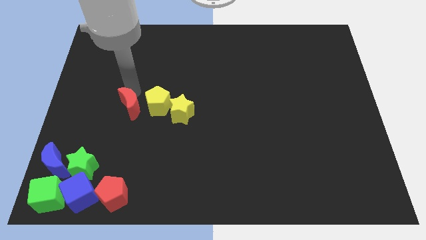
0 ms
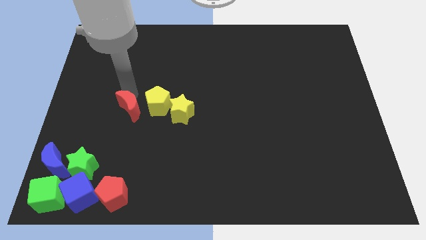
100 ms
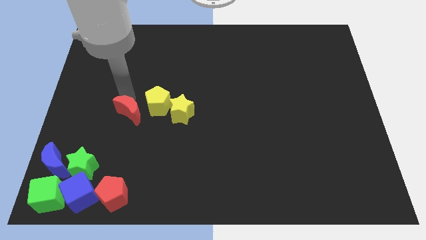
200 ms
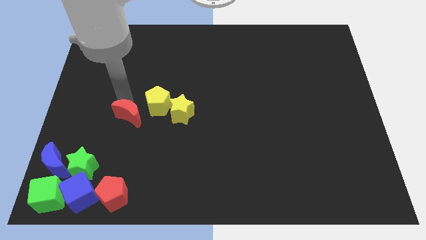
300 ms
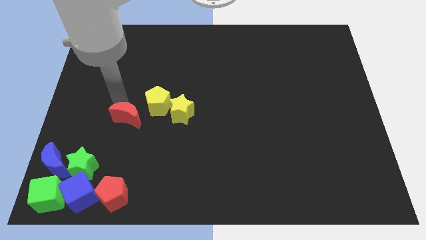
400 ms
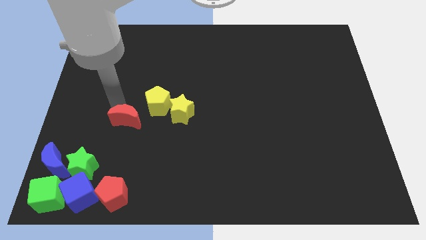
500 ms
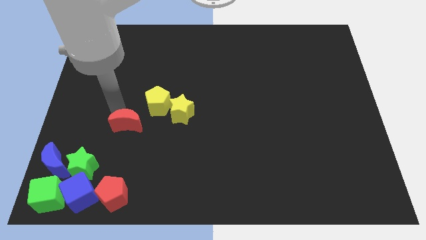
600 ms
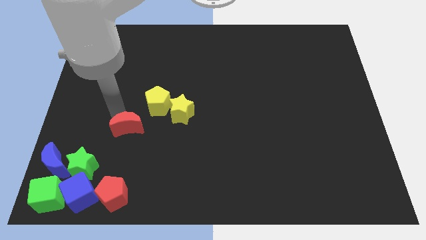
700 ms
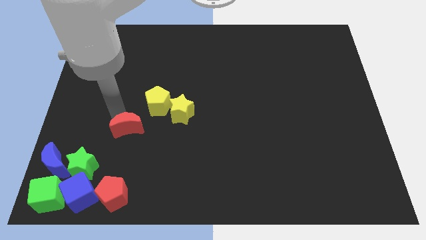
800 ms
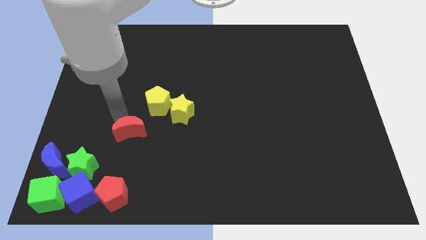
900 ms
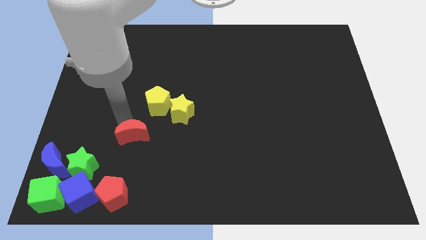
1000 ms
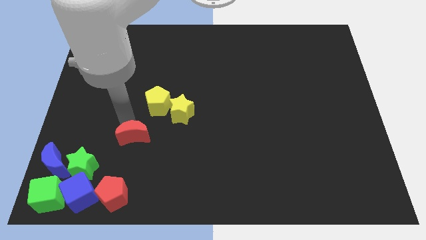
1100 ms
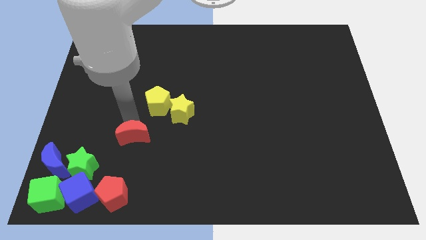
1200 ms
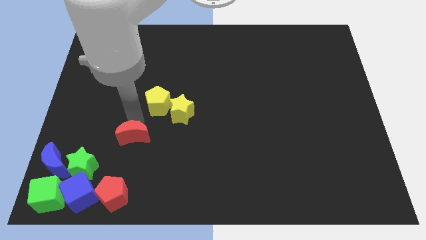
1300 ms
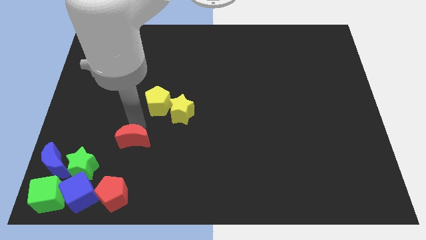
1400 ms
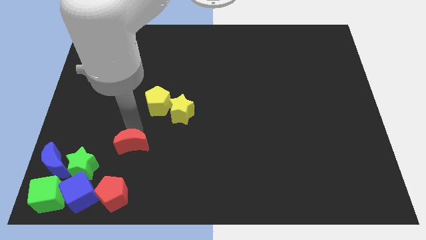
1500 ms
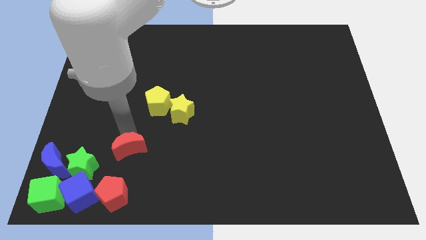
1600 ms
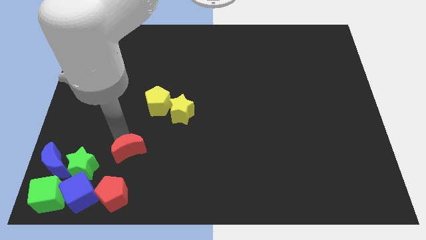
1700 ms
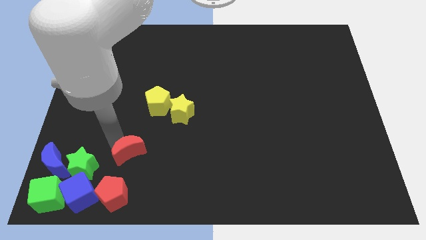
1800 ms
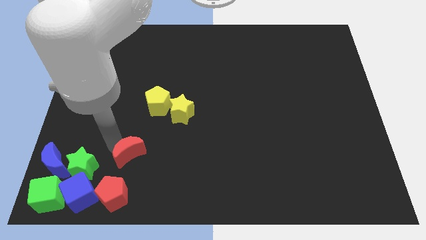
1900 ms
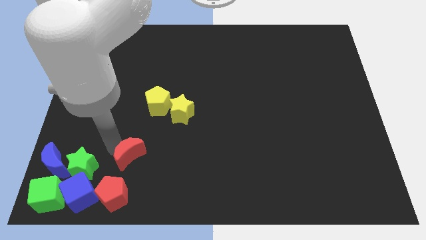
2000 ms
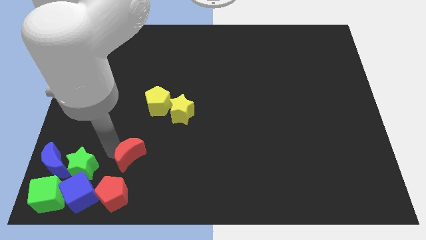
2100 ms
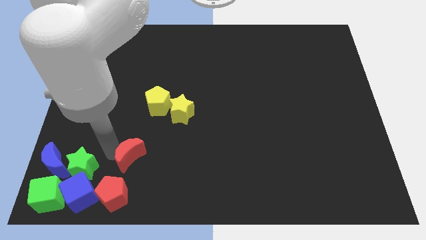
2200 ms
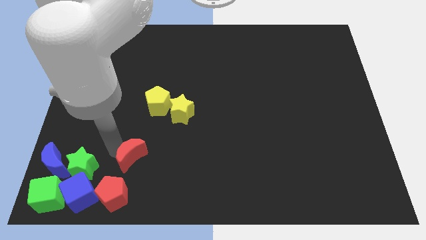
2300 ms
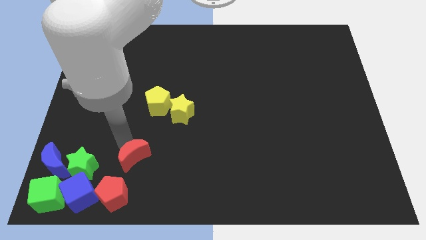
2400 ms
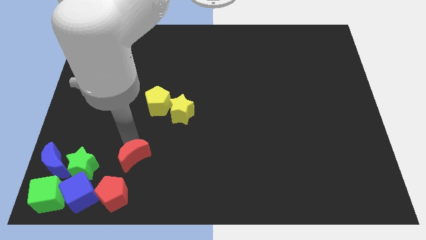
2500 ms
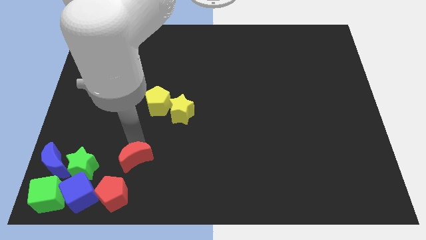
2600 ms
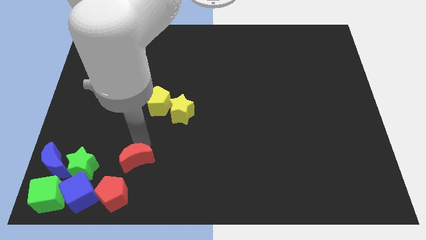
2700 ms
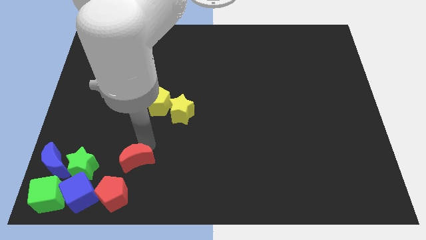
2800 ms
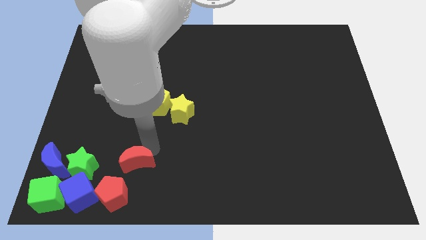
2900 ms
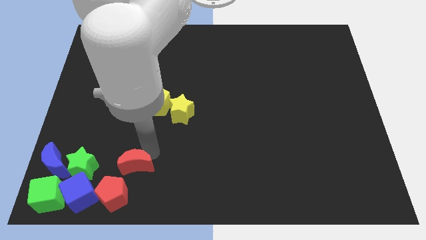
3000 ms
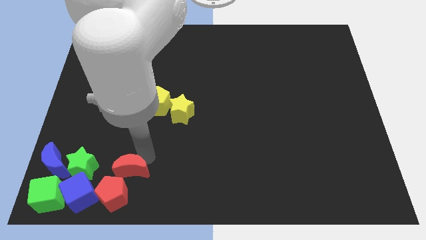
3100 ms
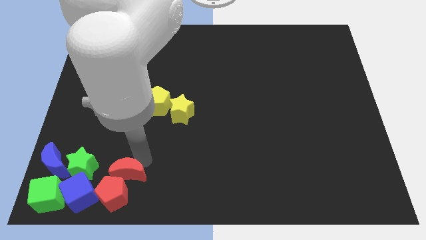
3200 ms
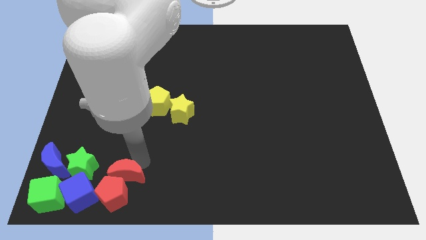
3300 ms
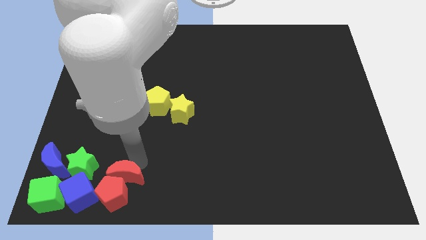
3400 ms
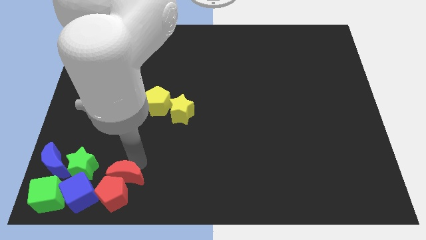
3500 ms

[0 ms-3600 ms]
slide the red moon diagonally bottom left to the yellow star

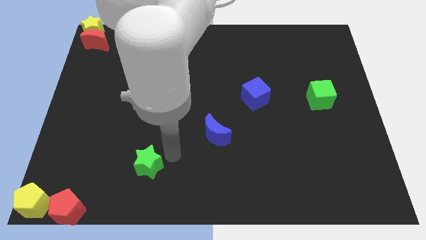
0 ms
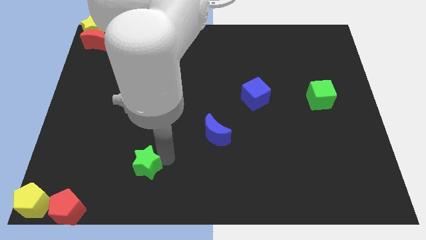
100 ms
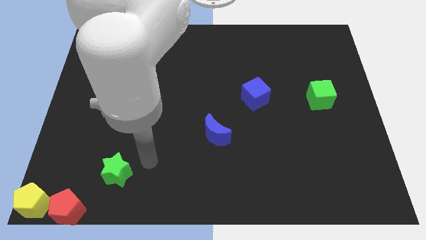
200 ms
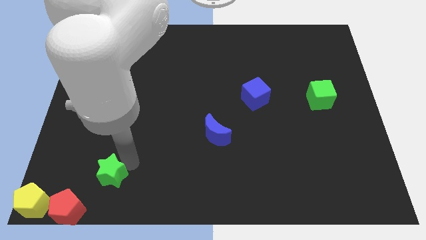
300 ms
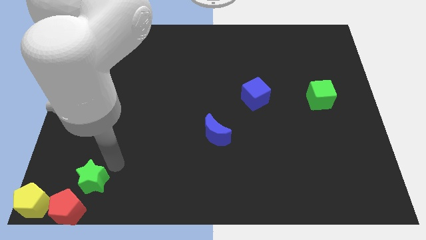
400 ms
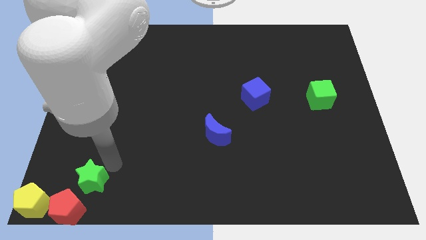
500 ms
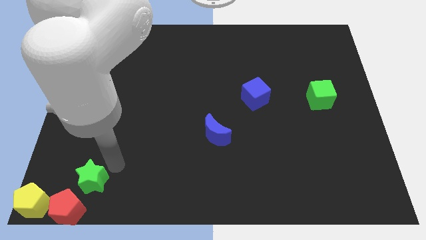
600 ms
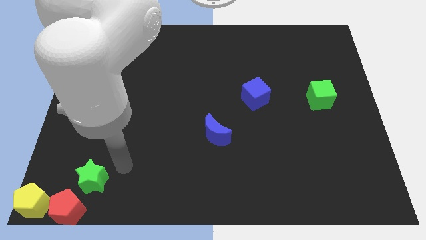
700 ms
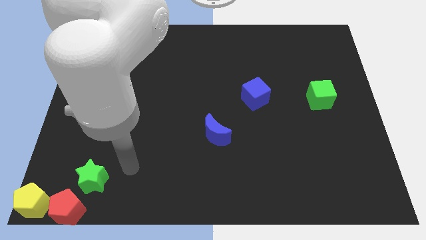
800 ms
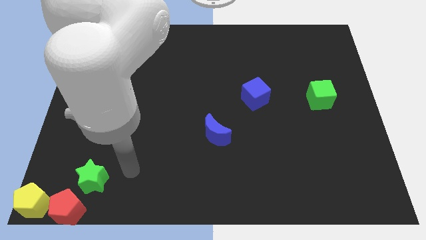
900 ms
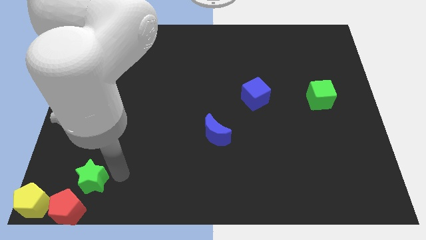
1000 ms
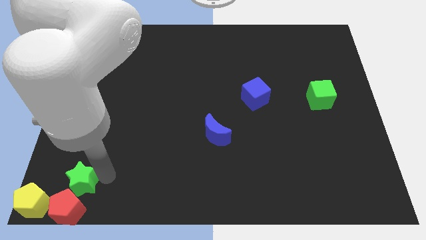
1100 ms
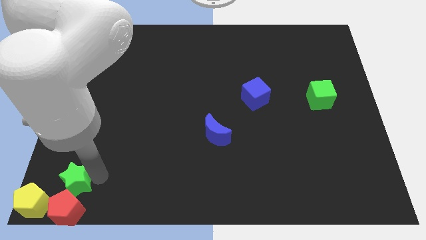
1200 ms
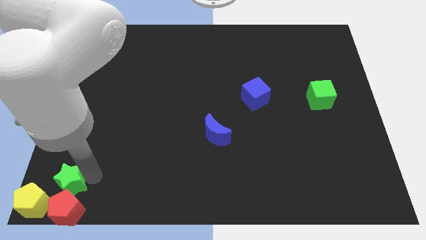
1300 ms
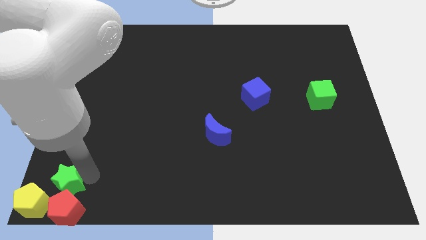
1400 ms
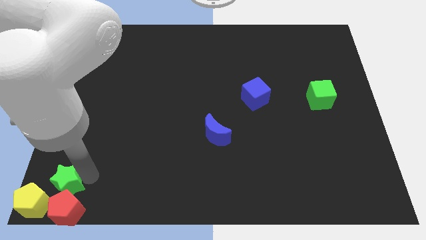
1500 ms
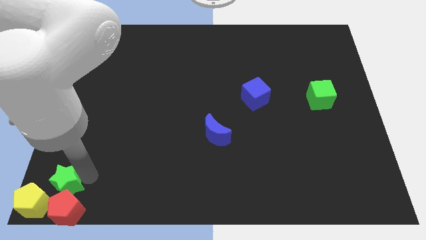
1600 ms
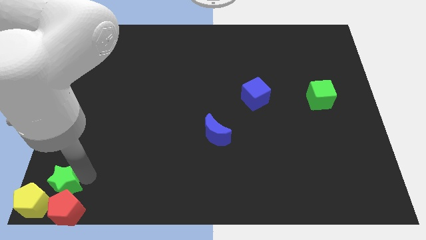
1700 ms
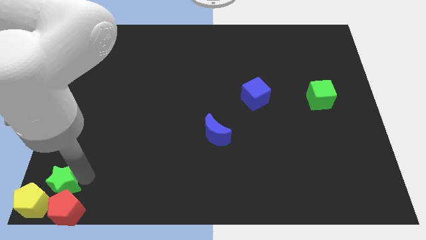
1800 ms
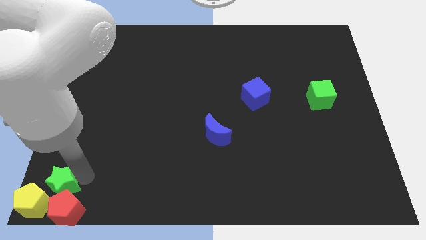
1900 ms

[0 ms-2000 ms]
slide the green star into the top side of the red pentagon

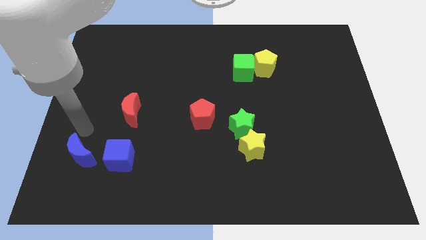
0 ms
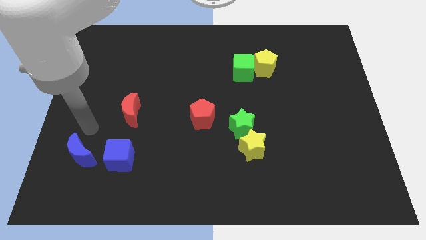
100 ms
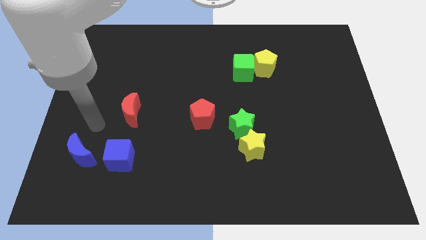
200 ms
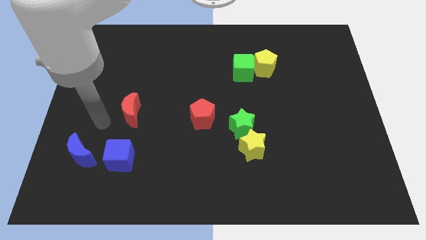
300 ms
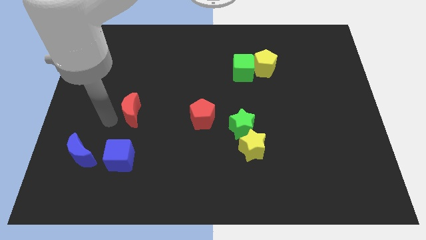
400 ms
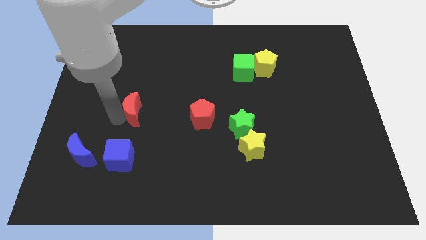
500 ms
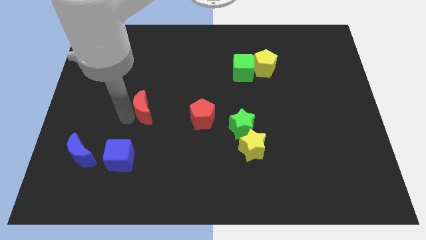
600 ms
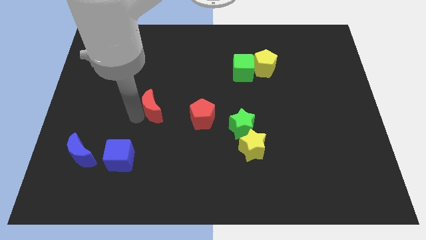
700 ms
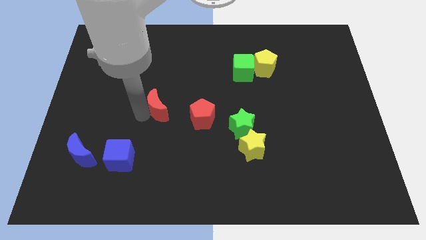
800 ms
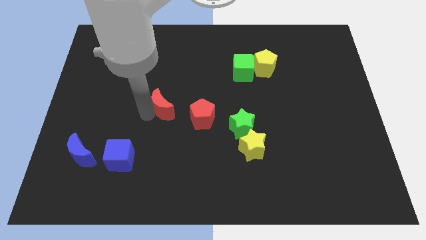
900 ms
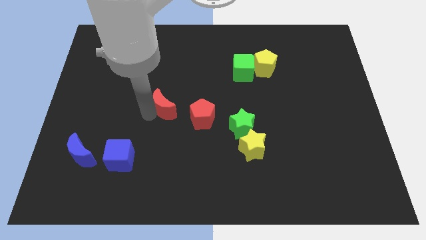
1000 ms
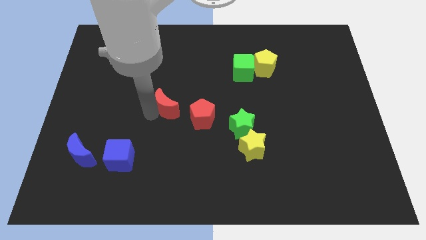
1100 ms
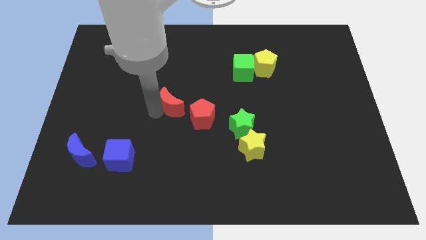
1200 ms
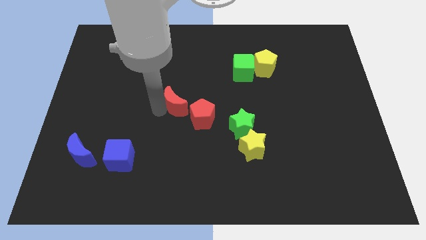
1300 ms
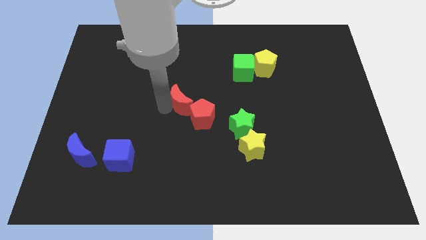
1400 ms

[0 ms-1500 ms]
slightly move the red moon close to red pentagon

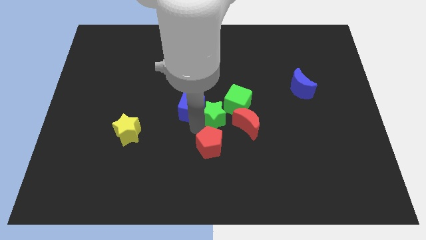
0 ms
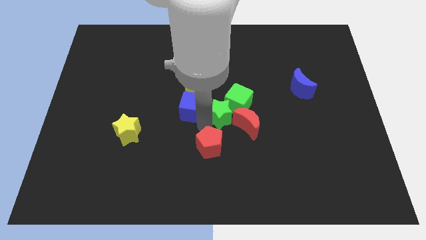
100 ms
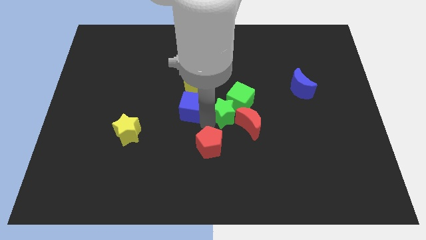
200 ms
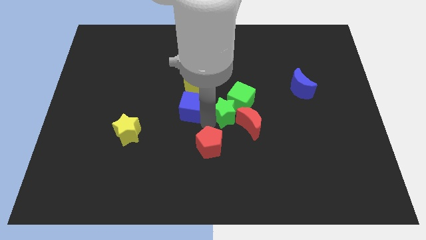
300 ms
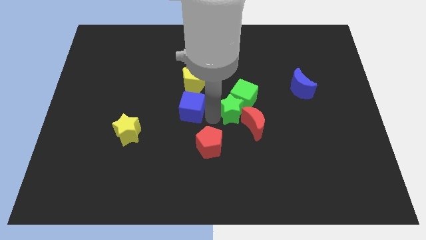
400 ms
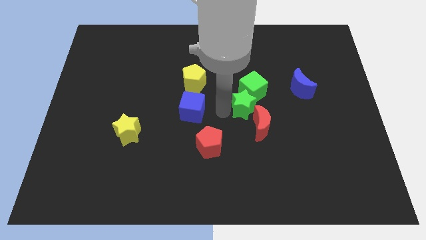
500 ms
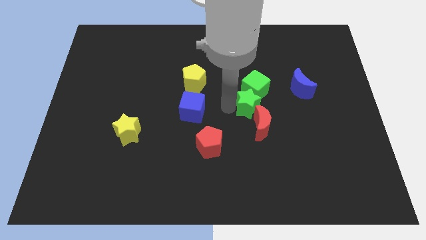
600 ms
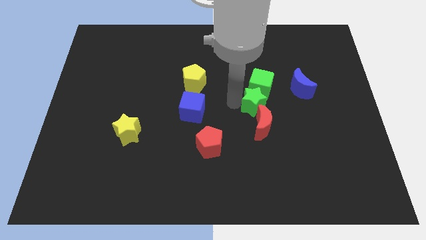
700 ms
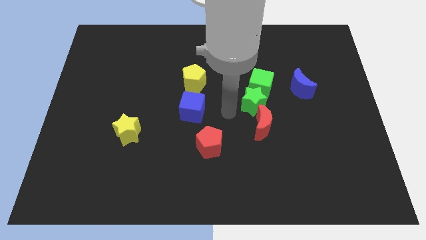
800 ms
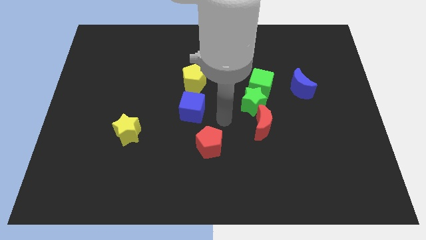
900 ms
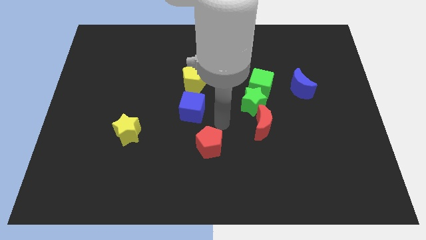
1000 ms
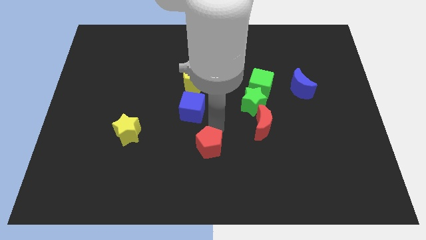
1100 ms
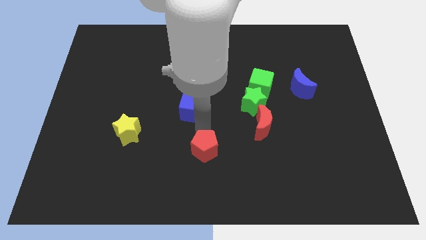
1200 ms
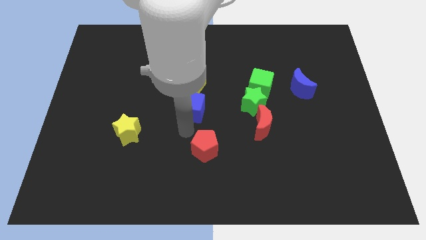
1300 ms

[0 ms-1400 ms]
move the green star into the green cube

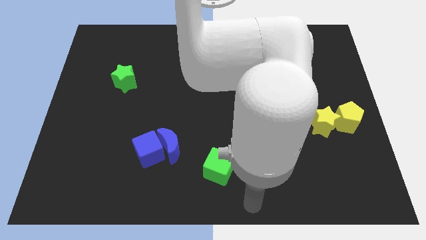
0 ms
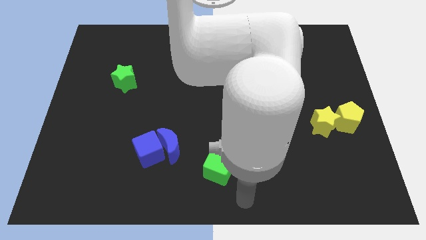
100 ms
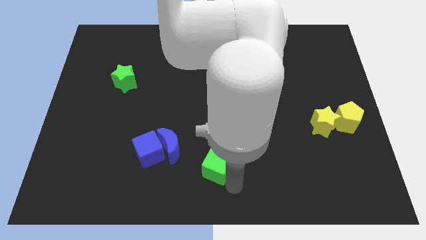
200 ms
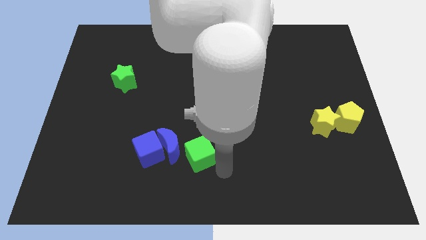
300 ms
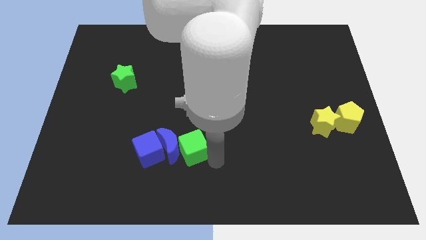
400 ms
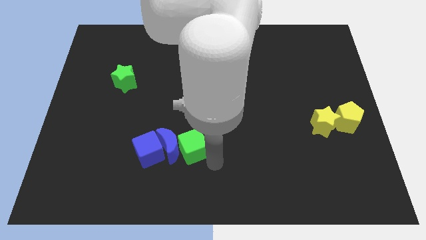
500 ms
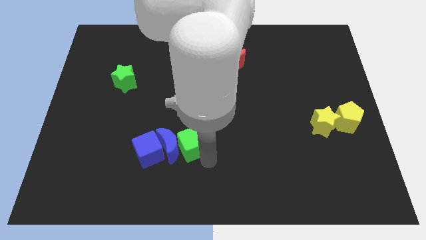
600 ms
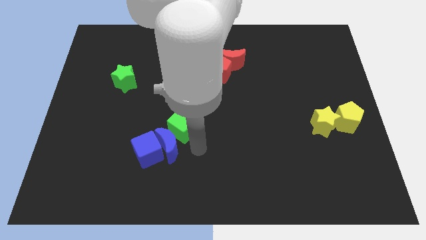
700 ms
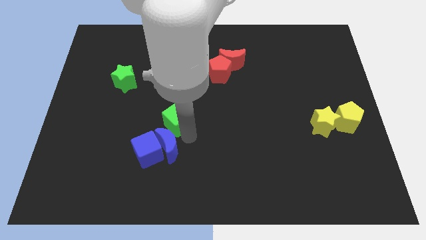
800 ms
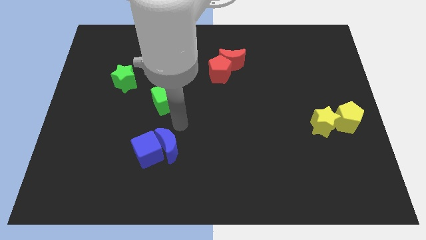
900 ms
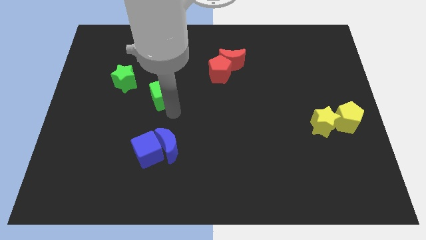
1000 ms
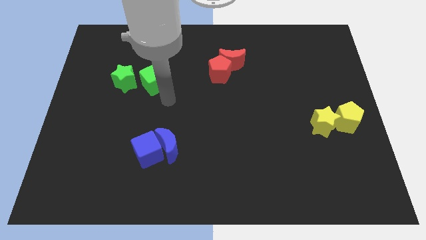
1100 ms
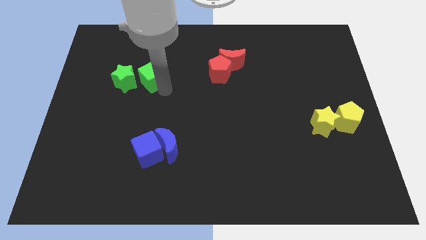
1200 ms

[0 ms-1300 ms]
move the green cube to the green star
